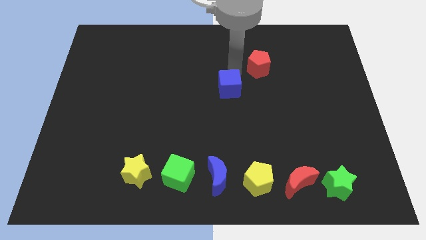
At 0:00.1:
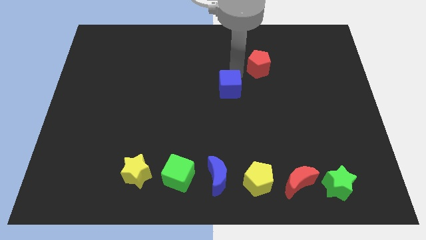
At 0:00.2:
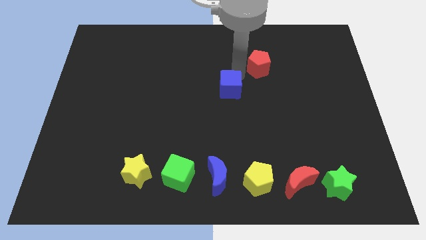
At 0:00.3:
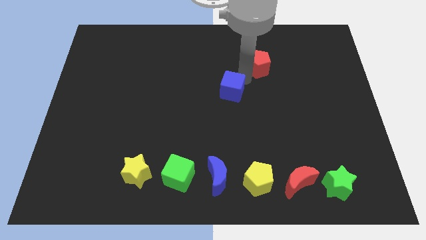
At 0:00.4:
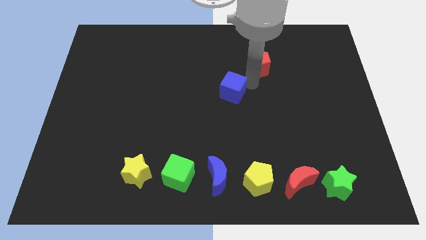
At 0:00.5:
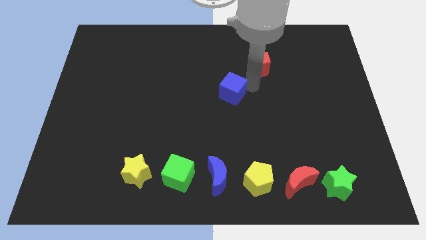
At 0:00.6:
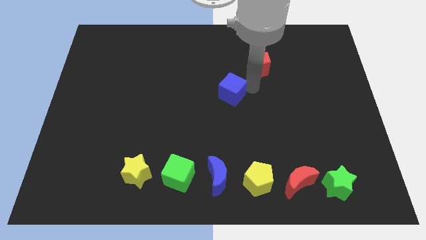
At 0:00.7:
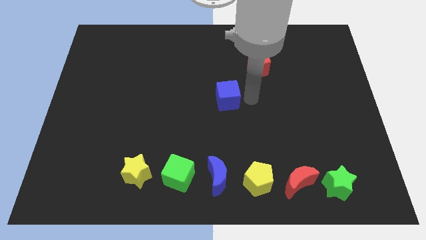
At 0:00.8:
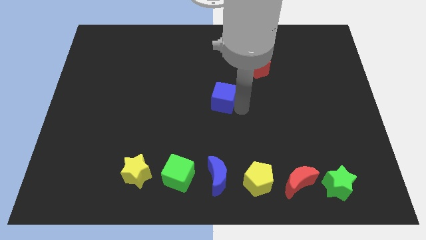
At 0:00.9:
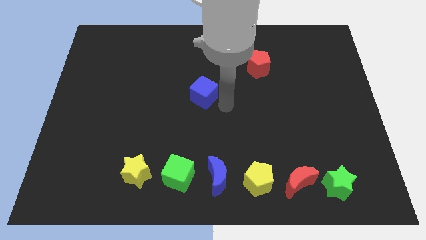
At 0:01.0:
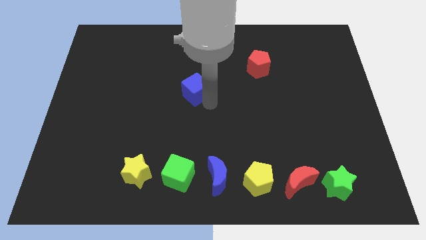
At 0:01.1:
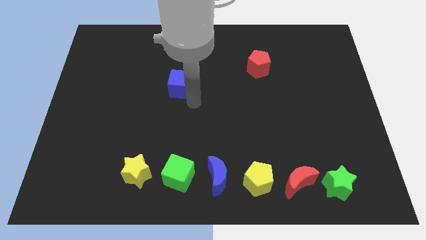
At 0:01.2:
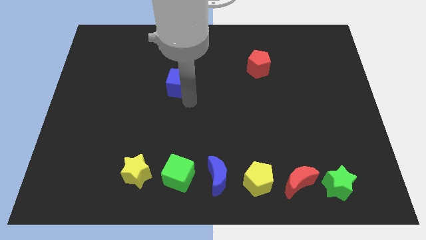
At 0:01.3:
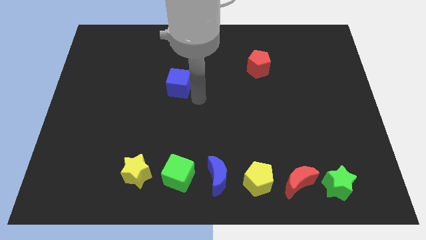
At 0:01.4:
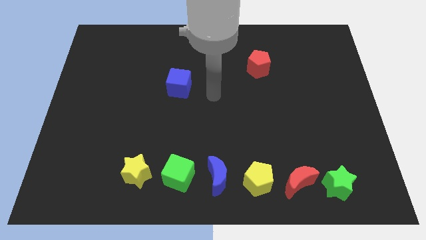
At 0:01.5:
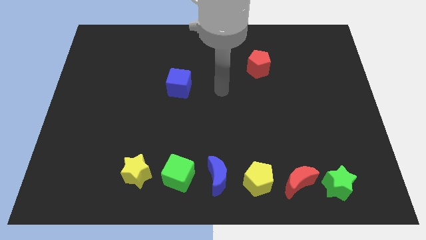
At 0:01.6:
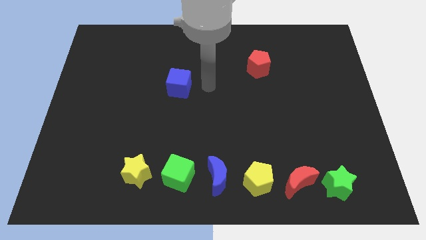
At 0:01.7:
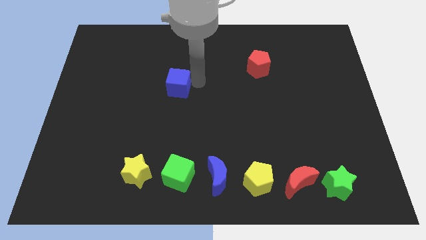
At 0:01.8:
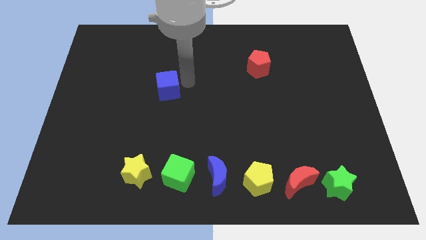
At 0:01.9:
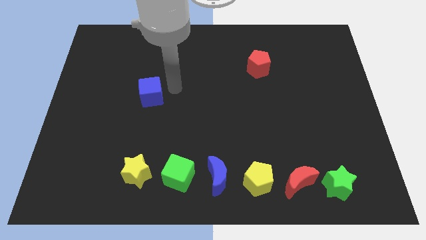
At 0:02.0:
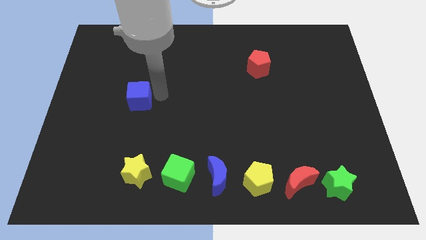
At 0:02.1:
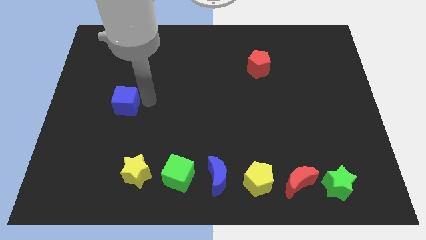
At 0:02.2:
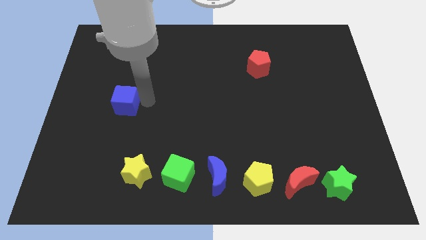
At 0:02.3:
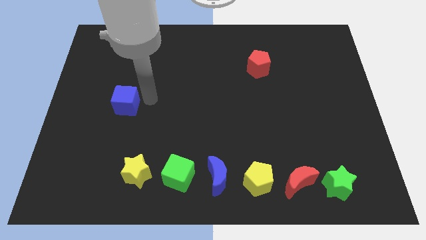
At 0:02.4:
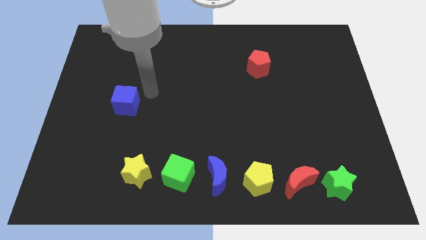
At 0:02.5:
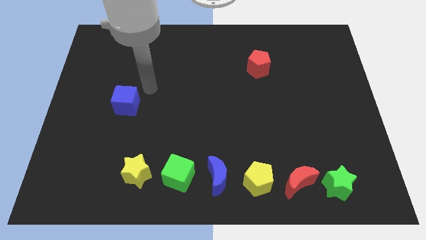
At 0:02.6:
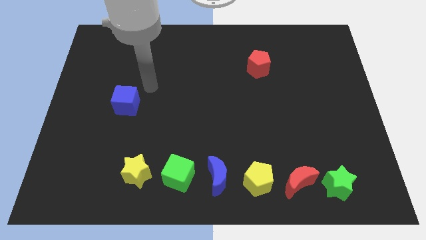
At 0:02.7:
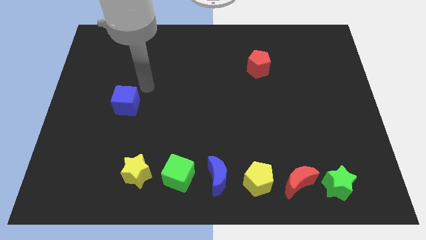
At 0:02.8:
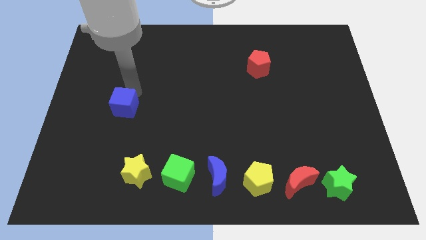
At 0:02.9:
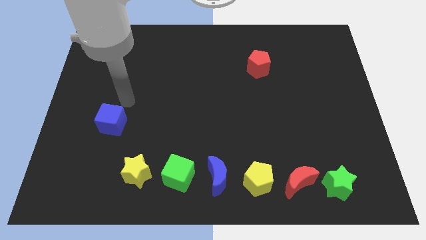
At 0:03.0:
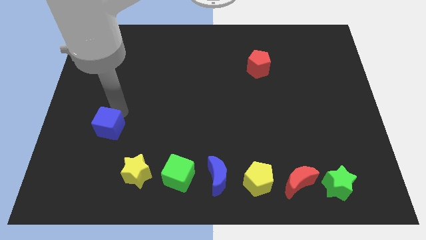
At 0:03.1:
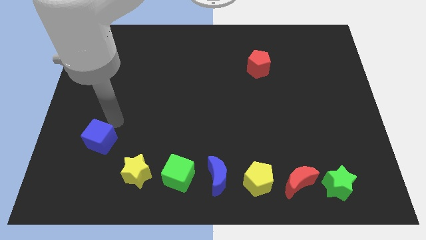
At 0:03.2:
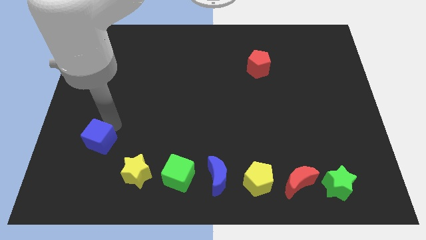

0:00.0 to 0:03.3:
move blue cube towards bottom left corner

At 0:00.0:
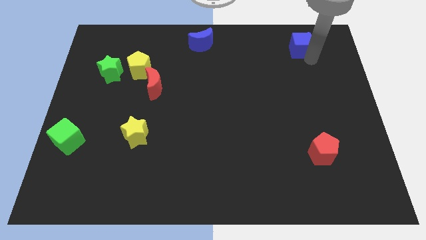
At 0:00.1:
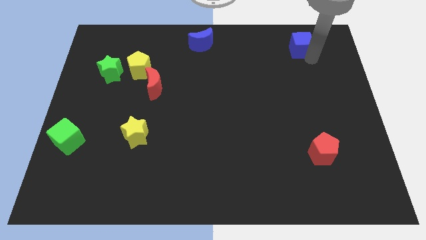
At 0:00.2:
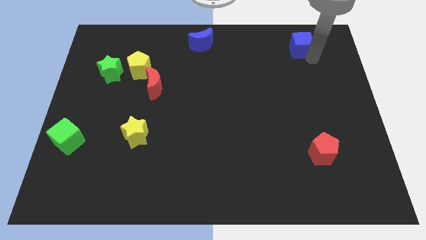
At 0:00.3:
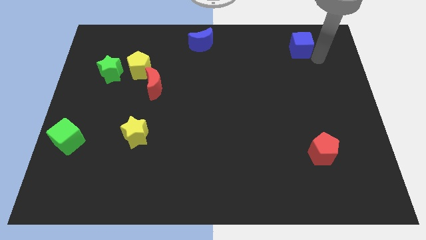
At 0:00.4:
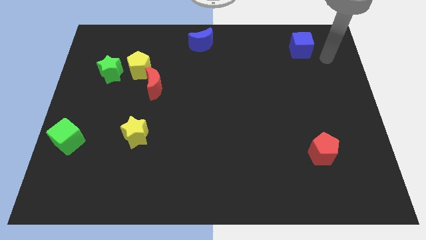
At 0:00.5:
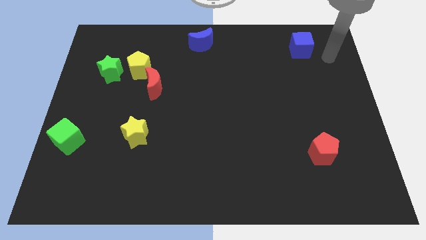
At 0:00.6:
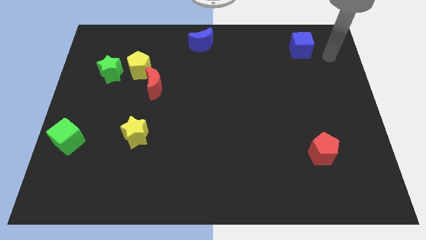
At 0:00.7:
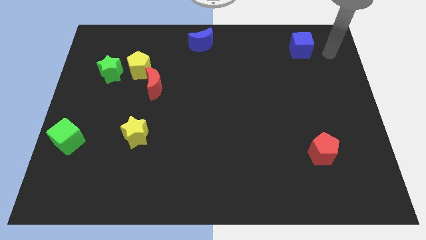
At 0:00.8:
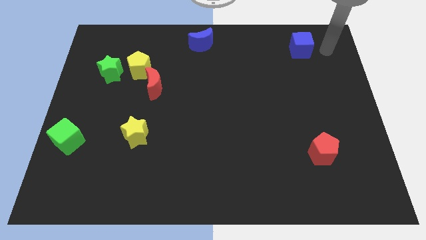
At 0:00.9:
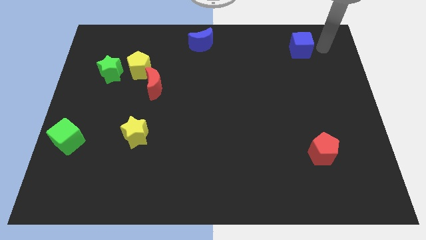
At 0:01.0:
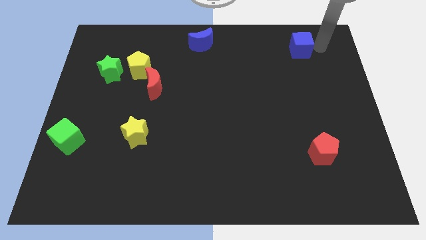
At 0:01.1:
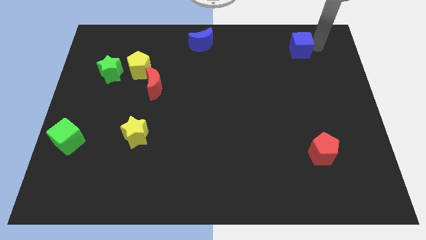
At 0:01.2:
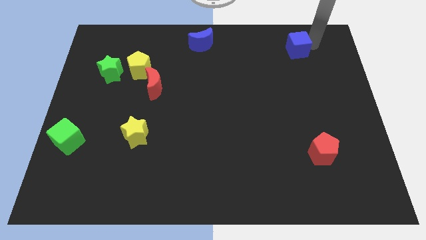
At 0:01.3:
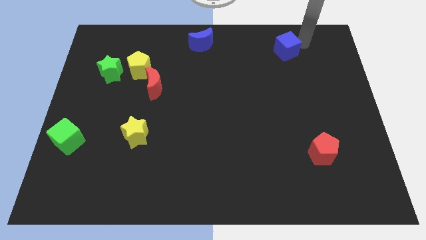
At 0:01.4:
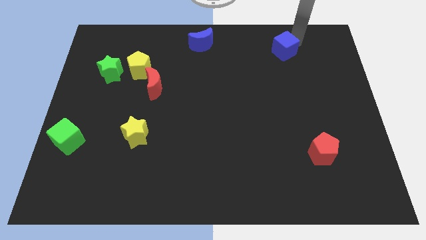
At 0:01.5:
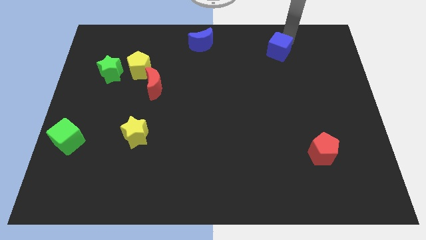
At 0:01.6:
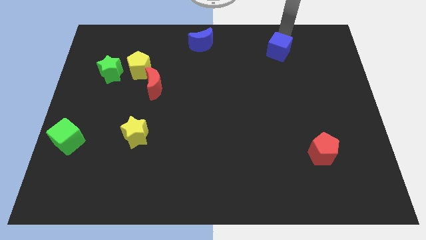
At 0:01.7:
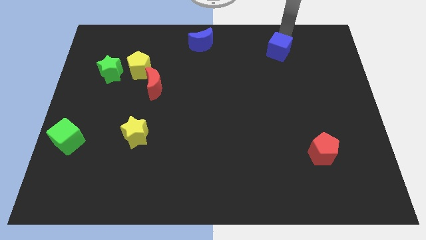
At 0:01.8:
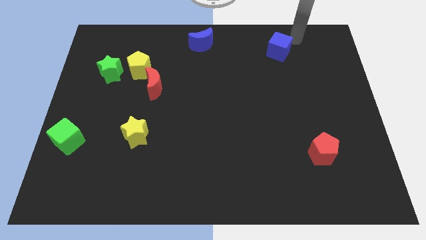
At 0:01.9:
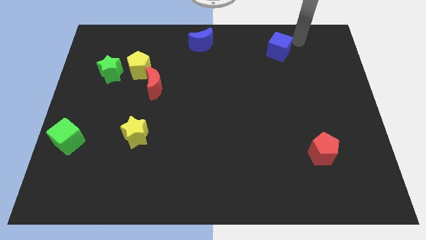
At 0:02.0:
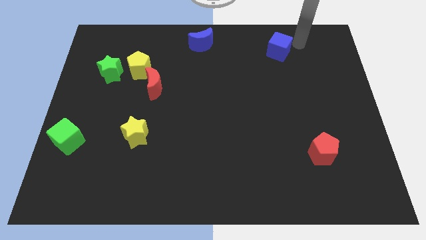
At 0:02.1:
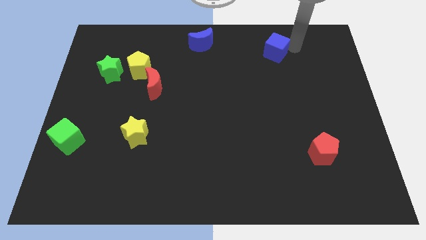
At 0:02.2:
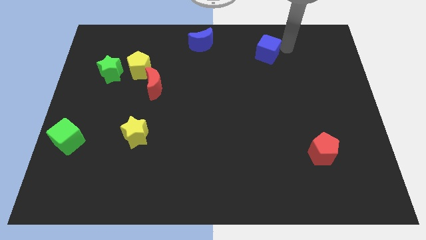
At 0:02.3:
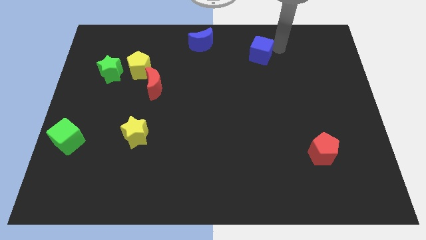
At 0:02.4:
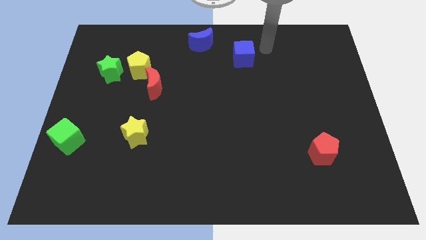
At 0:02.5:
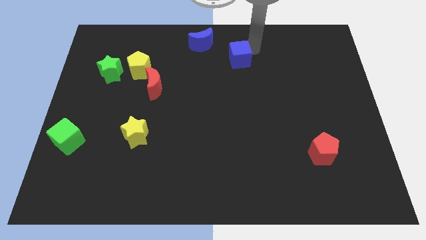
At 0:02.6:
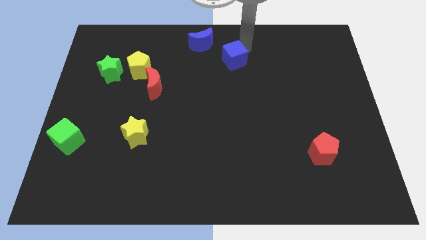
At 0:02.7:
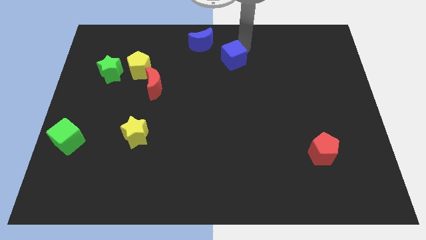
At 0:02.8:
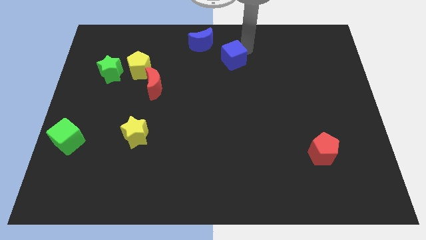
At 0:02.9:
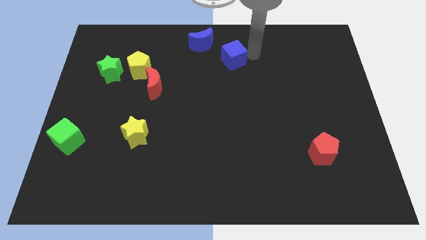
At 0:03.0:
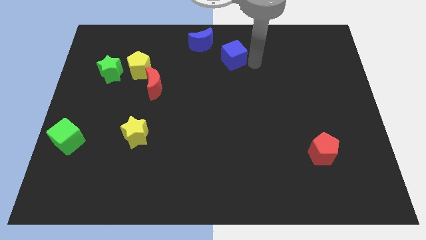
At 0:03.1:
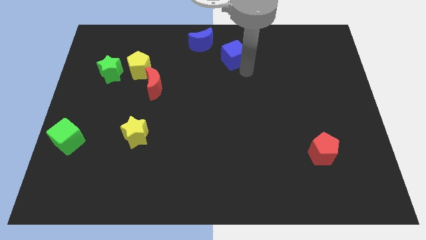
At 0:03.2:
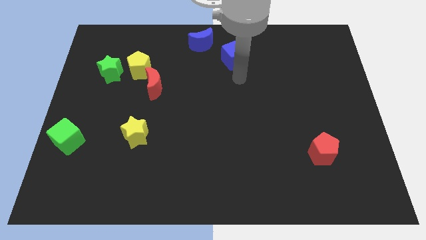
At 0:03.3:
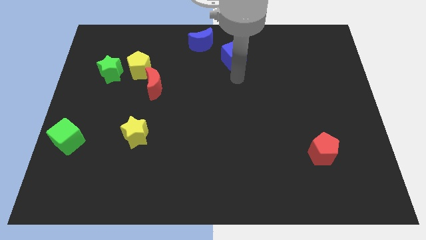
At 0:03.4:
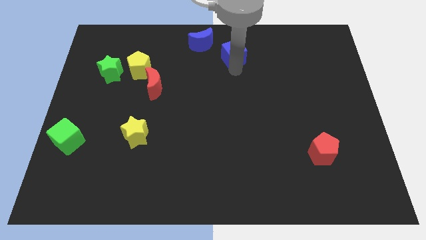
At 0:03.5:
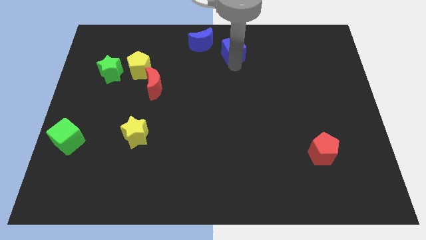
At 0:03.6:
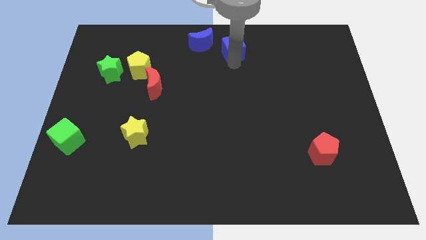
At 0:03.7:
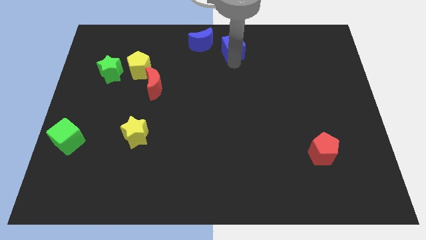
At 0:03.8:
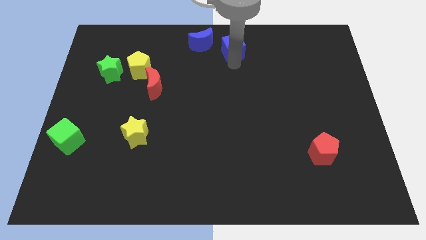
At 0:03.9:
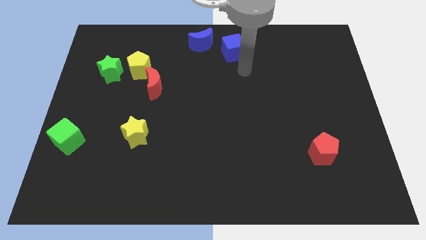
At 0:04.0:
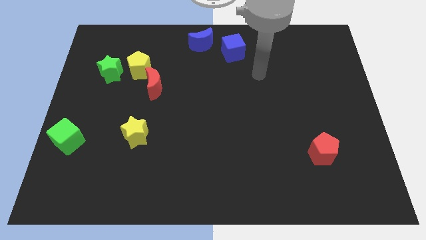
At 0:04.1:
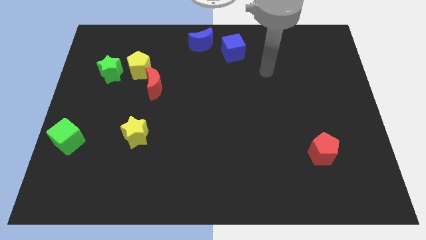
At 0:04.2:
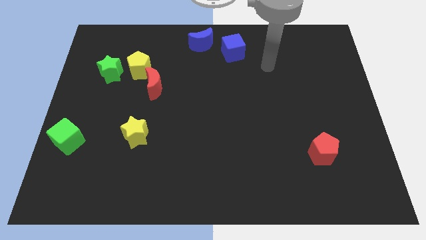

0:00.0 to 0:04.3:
move blue cube close to the blue moon

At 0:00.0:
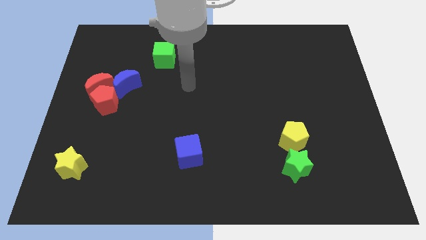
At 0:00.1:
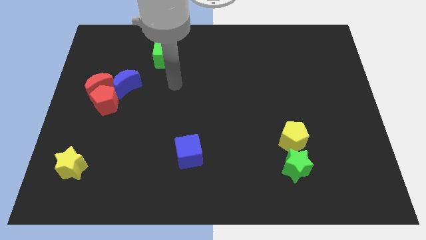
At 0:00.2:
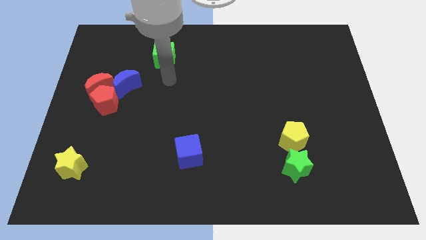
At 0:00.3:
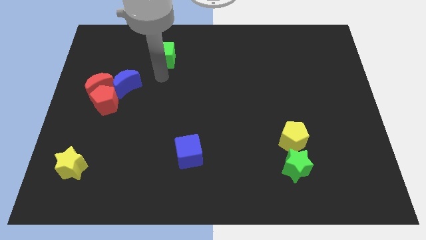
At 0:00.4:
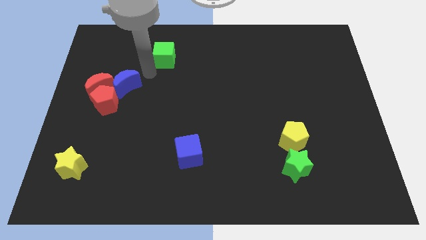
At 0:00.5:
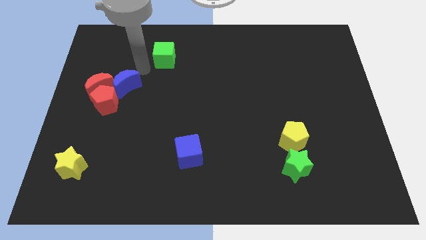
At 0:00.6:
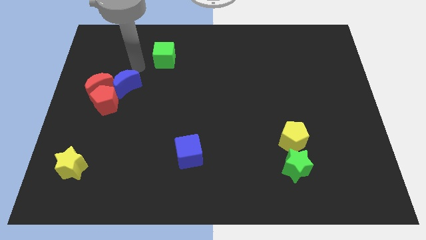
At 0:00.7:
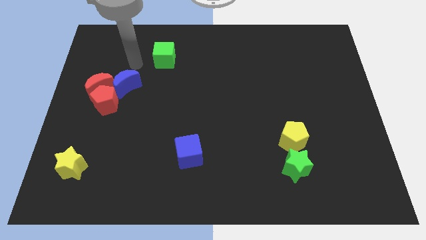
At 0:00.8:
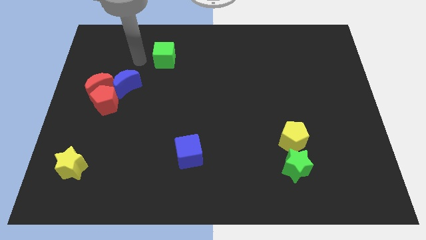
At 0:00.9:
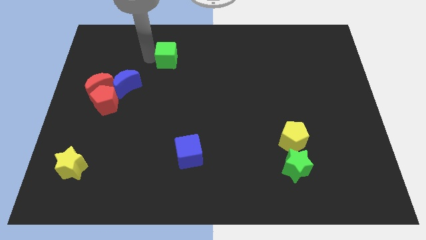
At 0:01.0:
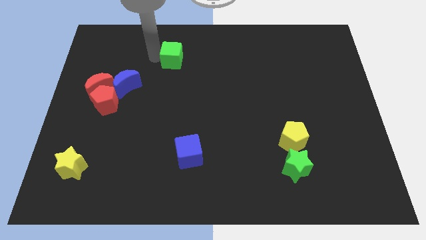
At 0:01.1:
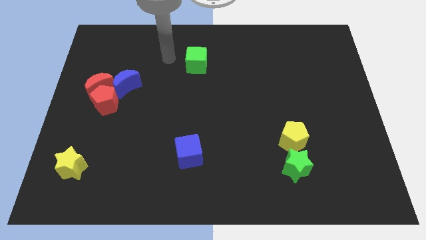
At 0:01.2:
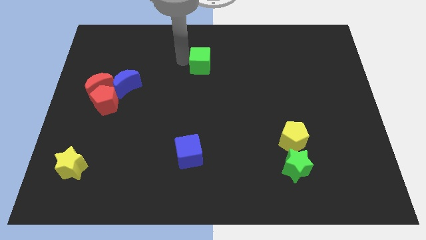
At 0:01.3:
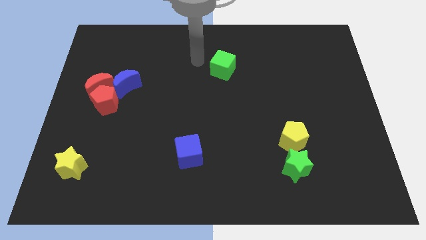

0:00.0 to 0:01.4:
move the green cube towards the right
